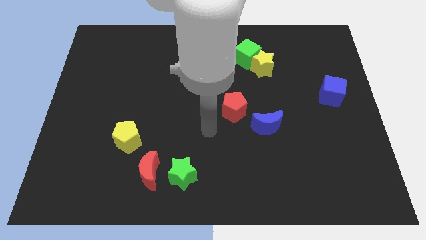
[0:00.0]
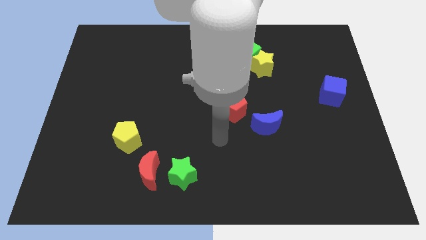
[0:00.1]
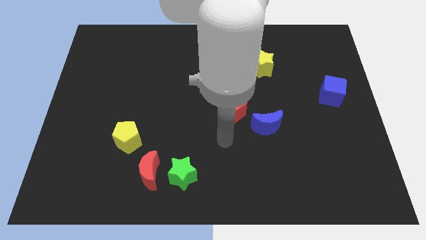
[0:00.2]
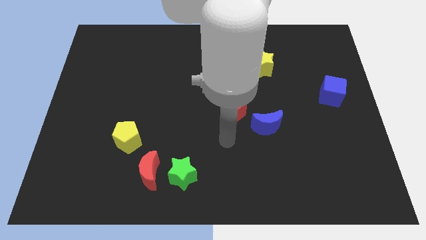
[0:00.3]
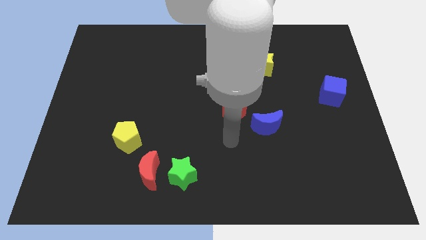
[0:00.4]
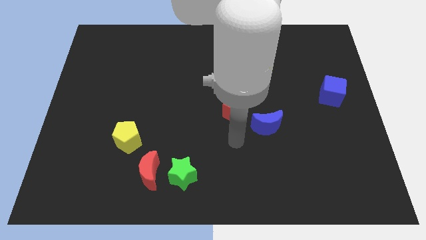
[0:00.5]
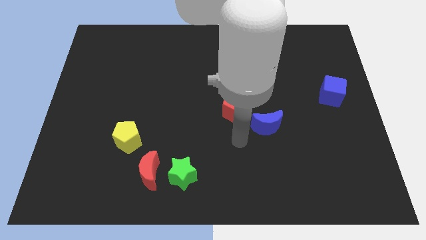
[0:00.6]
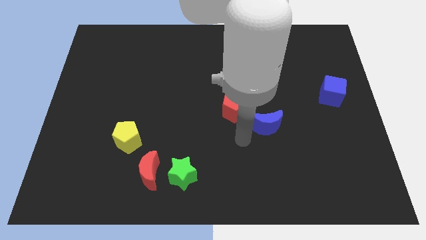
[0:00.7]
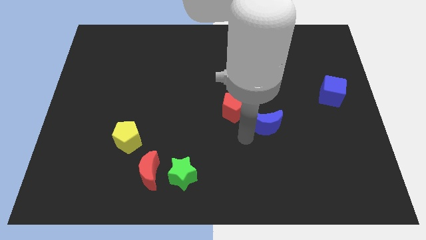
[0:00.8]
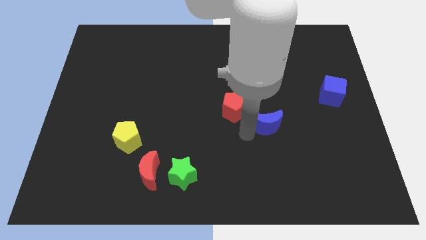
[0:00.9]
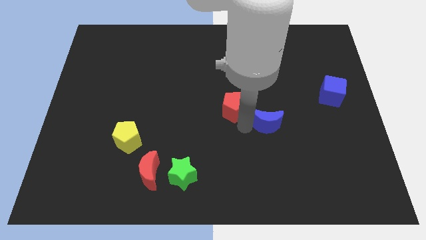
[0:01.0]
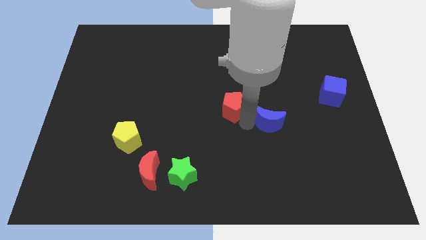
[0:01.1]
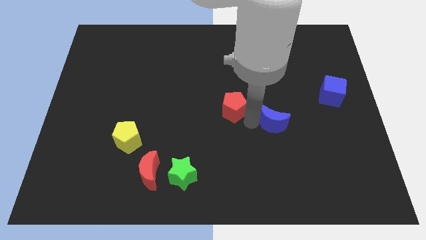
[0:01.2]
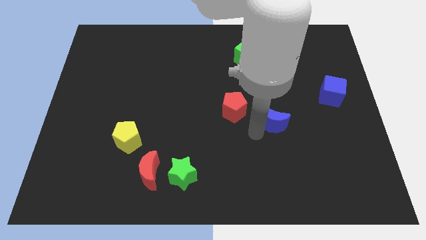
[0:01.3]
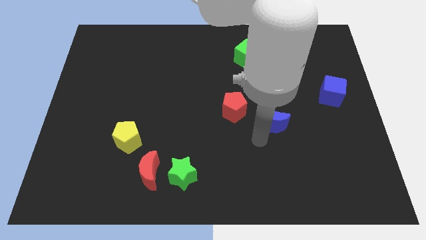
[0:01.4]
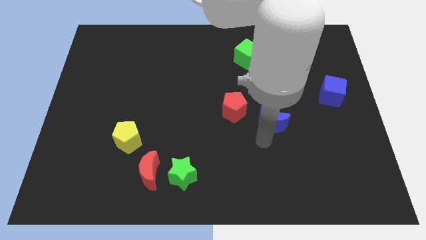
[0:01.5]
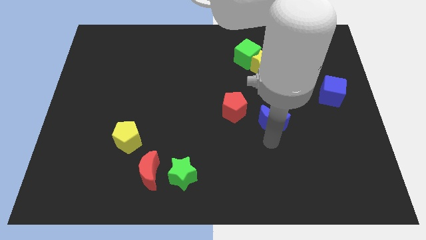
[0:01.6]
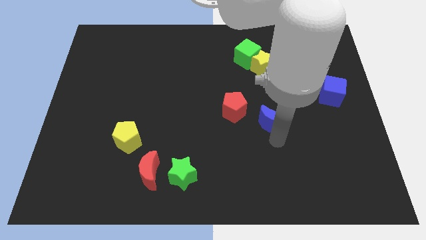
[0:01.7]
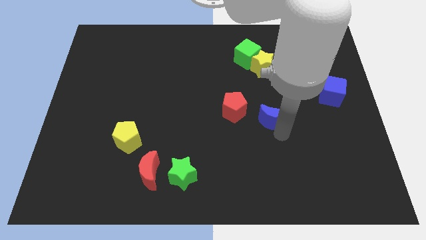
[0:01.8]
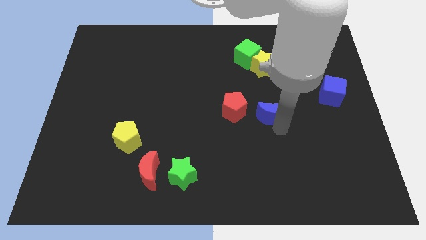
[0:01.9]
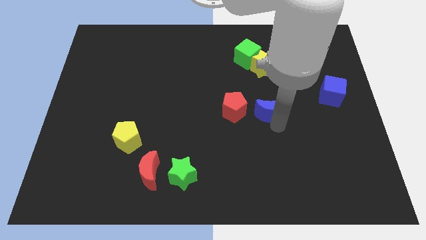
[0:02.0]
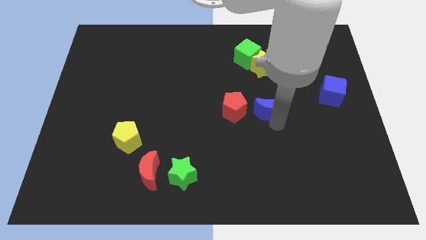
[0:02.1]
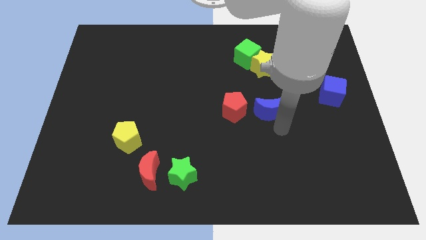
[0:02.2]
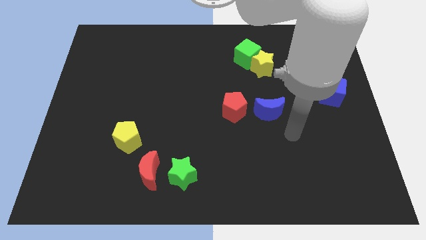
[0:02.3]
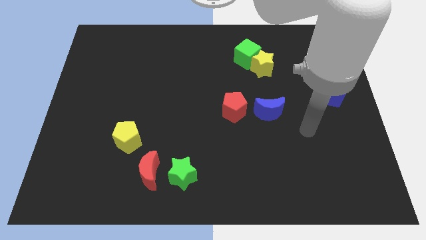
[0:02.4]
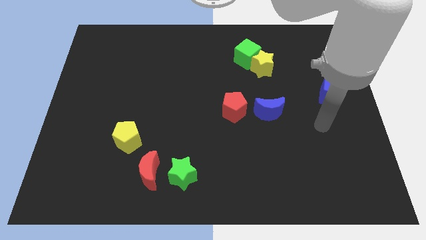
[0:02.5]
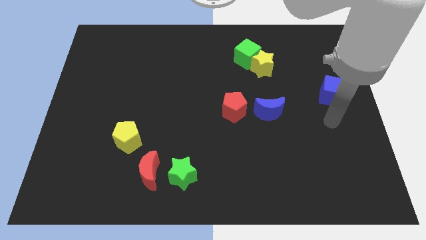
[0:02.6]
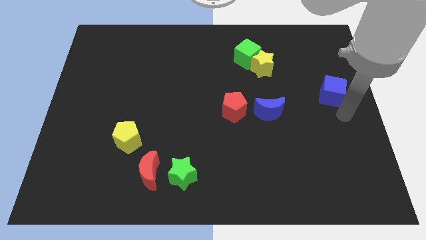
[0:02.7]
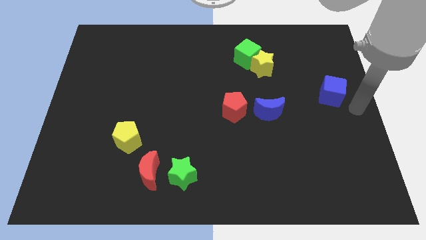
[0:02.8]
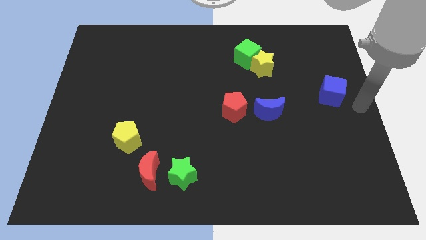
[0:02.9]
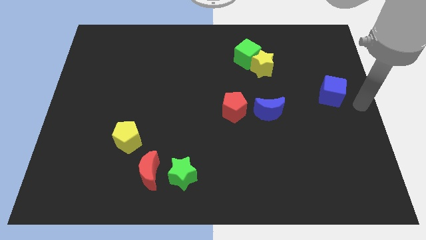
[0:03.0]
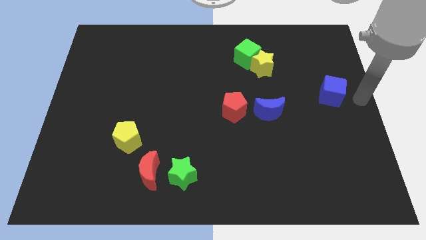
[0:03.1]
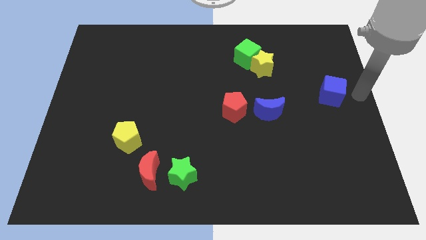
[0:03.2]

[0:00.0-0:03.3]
slightly move the blue crescent to the right of the red pentagon

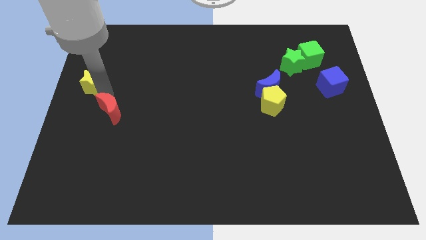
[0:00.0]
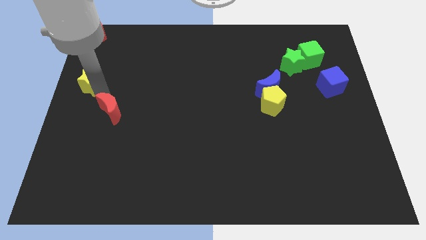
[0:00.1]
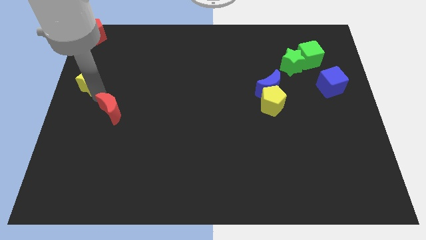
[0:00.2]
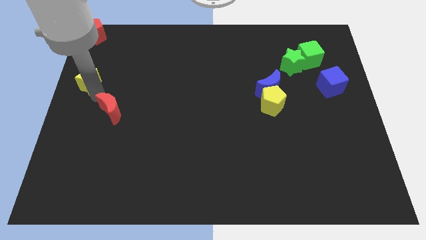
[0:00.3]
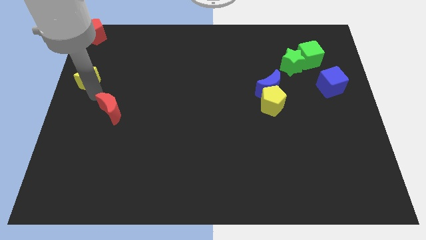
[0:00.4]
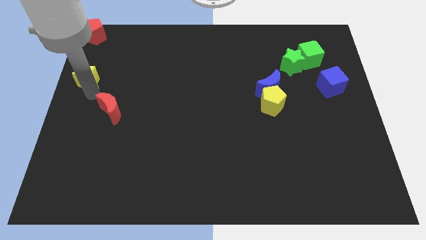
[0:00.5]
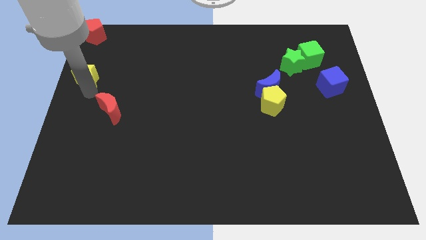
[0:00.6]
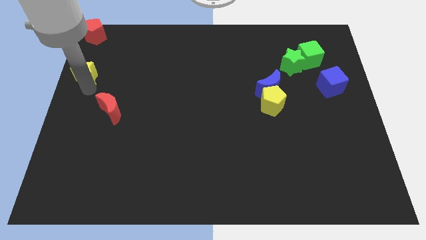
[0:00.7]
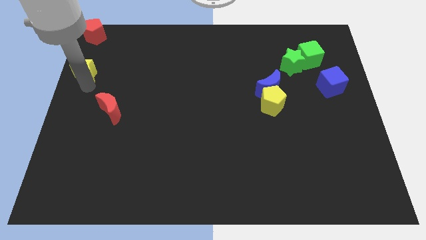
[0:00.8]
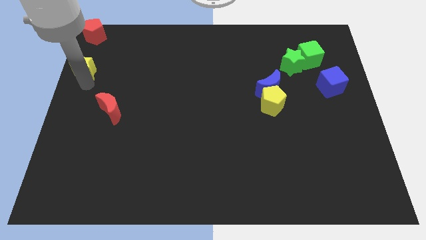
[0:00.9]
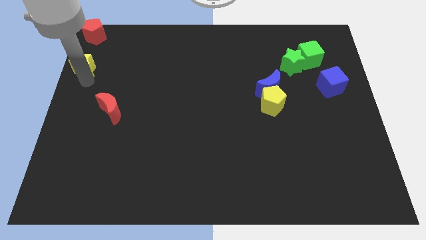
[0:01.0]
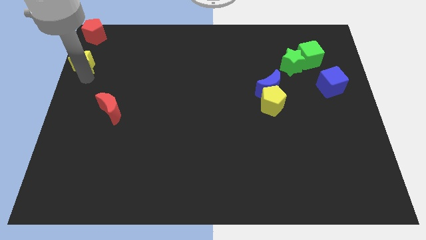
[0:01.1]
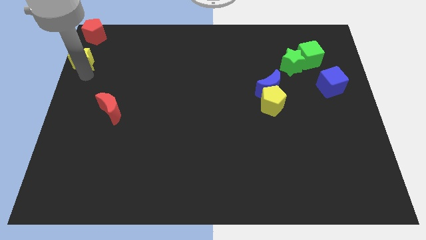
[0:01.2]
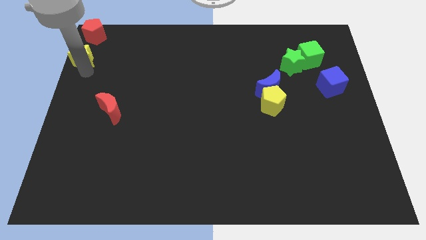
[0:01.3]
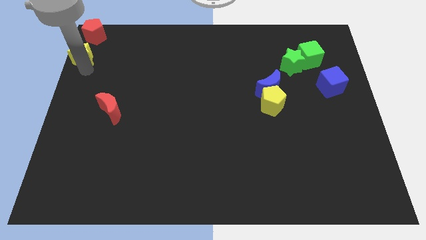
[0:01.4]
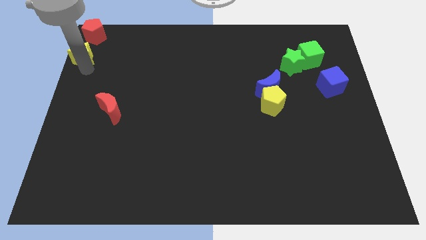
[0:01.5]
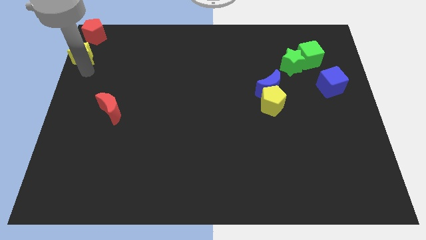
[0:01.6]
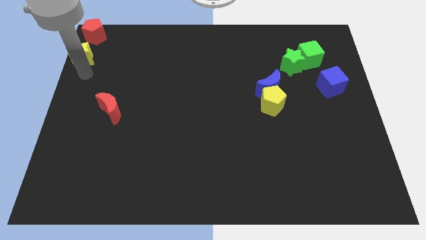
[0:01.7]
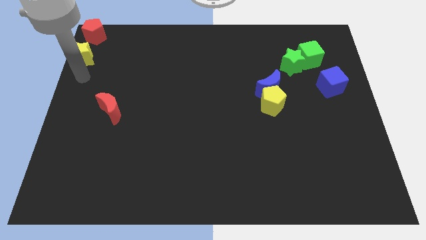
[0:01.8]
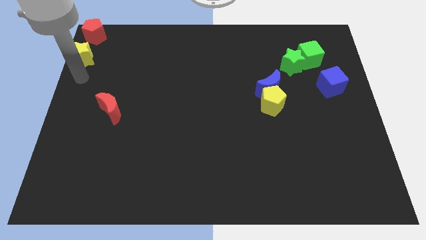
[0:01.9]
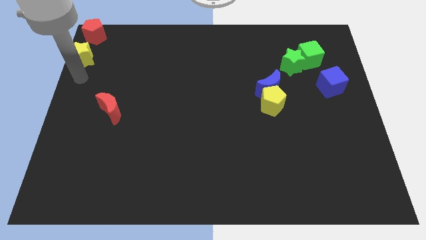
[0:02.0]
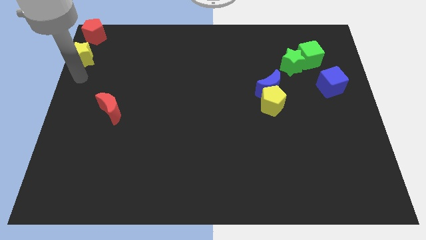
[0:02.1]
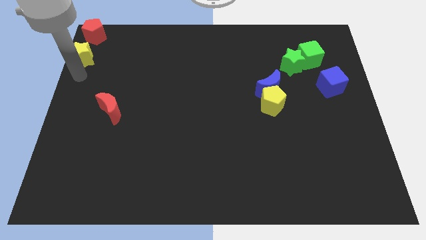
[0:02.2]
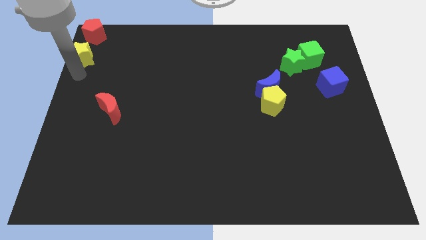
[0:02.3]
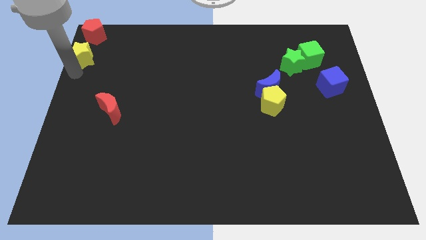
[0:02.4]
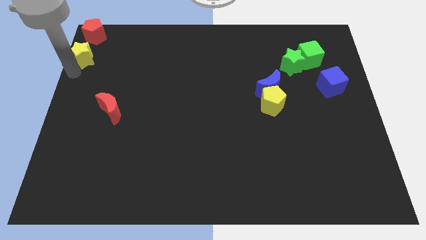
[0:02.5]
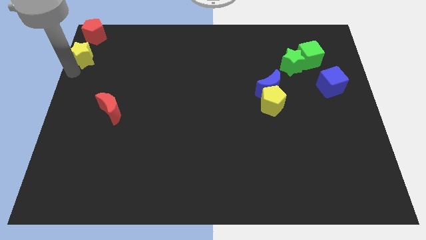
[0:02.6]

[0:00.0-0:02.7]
place the yellow star below the red pentagon

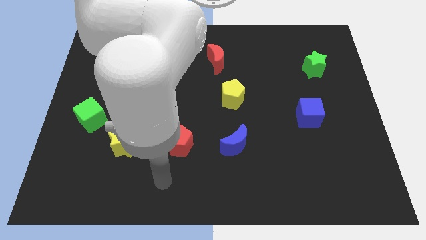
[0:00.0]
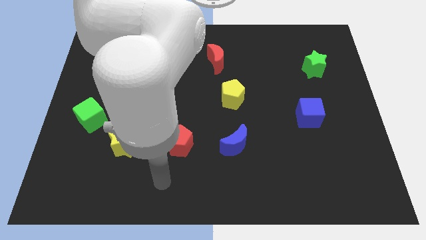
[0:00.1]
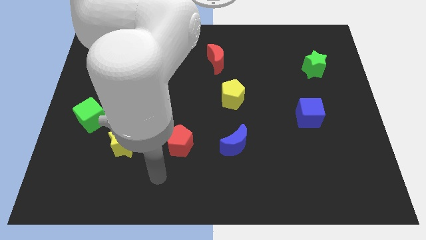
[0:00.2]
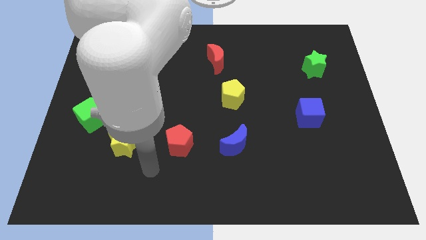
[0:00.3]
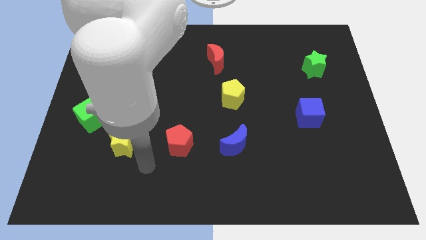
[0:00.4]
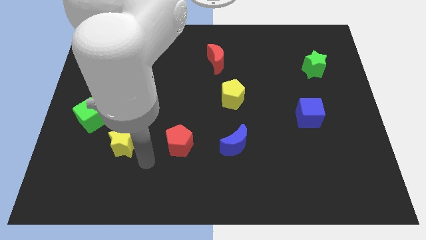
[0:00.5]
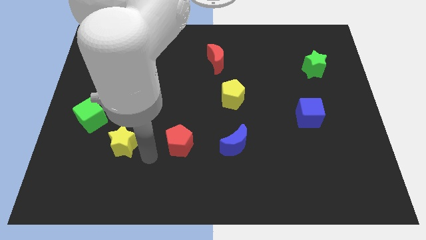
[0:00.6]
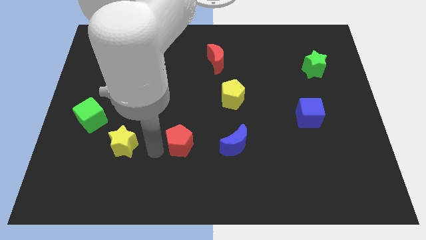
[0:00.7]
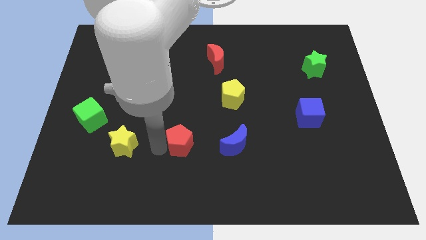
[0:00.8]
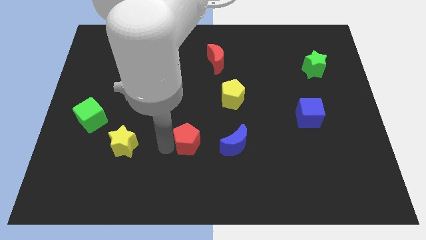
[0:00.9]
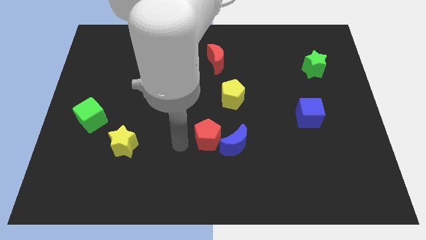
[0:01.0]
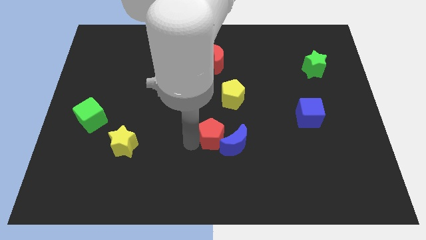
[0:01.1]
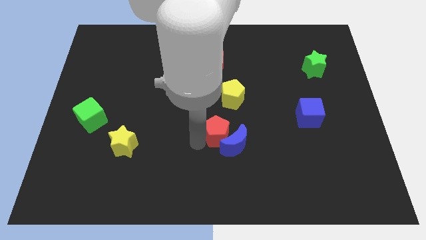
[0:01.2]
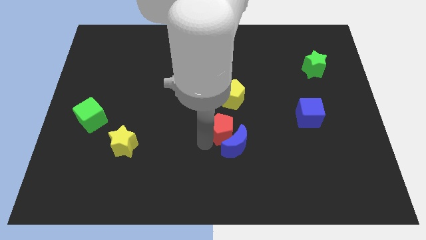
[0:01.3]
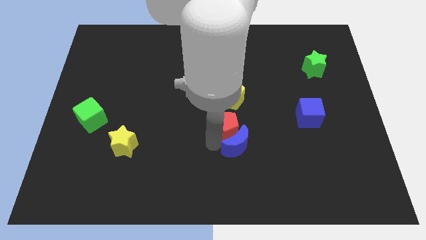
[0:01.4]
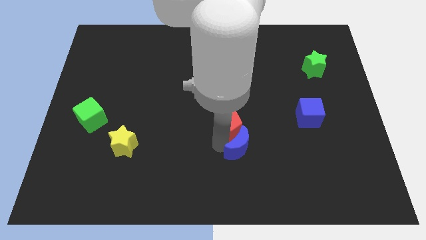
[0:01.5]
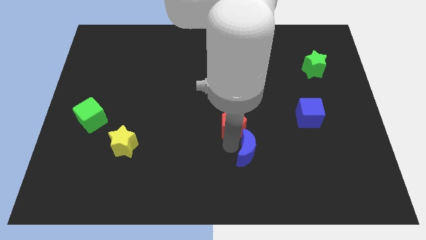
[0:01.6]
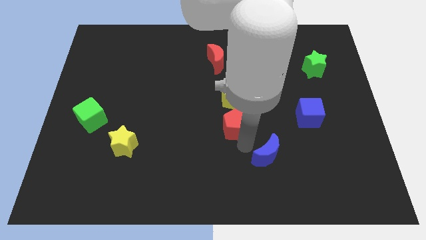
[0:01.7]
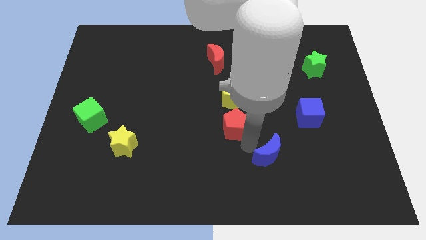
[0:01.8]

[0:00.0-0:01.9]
push the red pentagon below the yellow pentagon

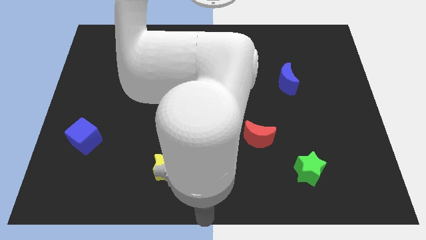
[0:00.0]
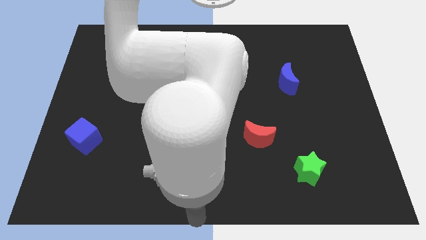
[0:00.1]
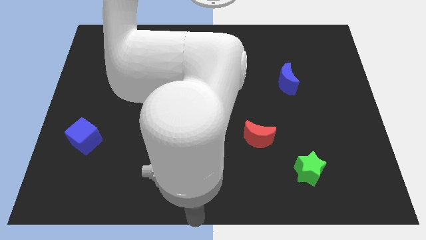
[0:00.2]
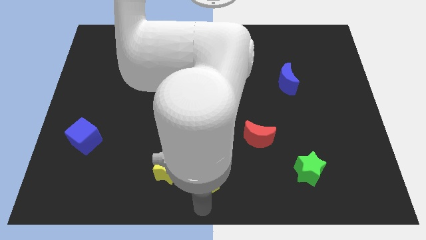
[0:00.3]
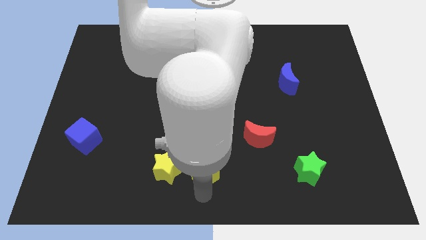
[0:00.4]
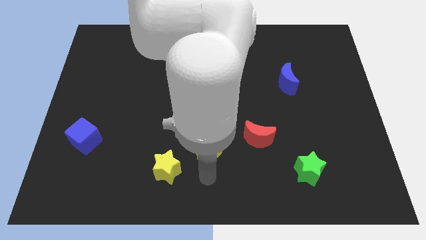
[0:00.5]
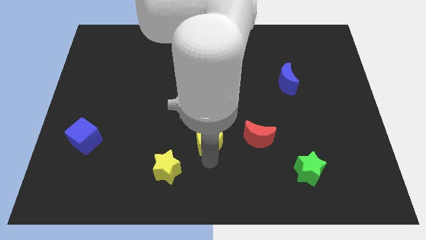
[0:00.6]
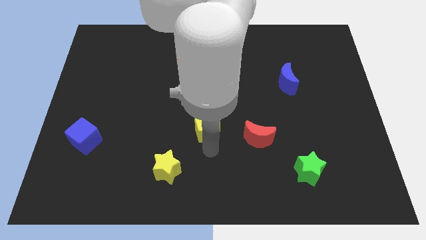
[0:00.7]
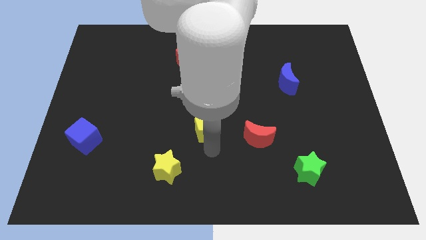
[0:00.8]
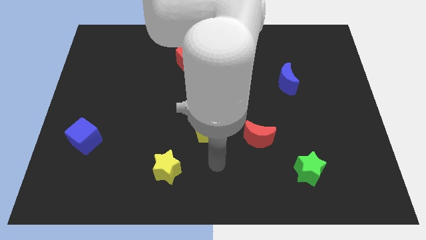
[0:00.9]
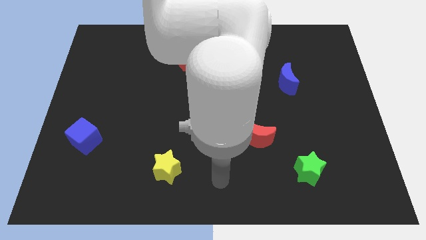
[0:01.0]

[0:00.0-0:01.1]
move the yellow pentagon to the left side of the red moon
